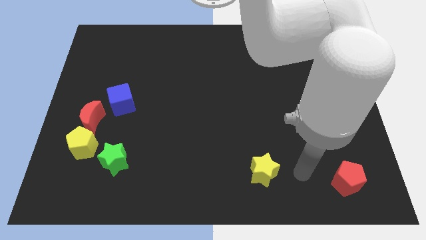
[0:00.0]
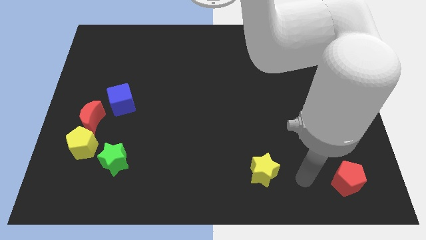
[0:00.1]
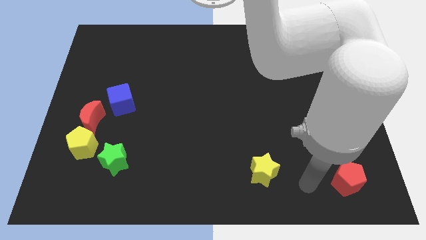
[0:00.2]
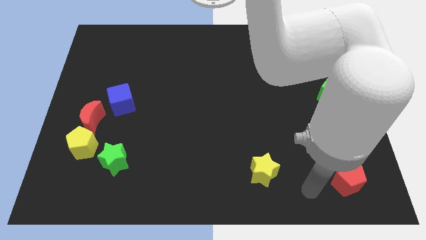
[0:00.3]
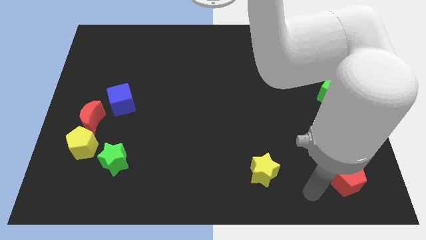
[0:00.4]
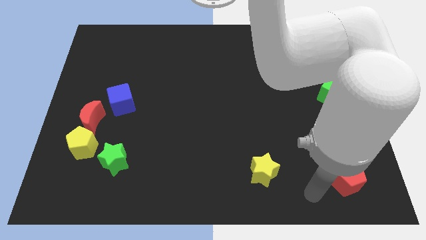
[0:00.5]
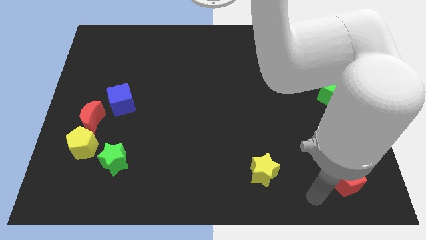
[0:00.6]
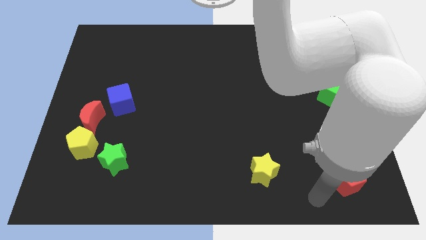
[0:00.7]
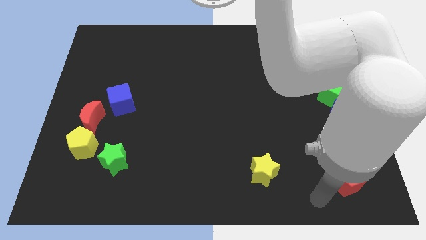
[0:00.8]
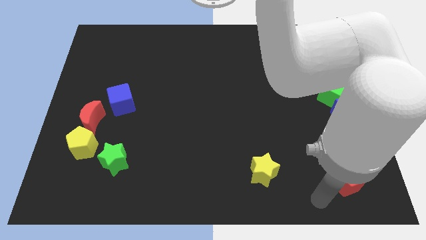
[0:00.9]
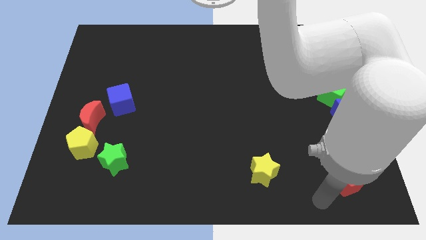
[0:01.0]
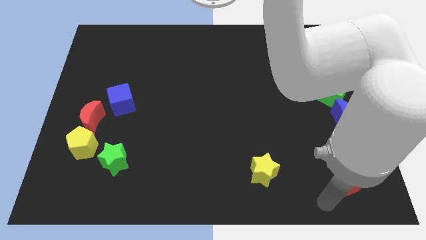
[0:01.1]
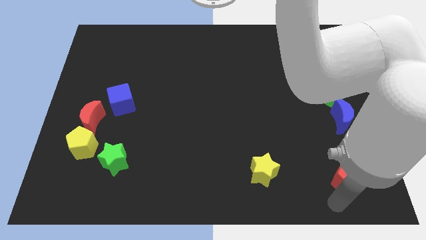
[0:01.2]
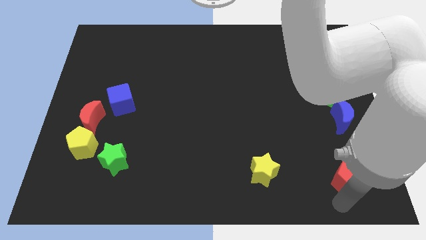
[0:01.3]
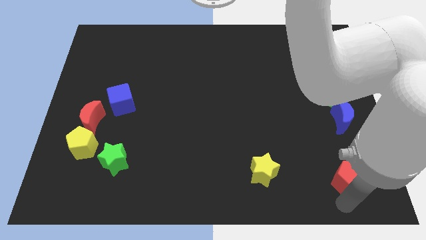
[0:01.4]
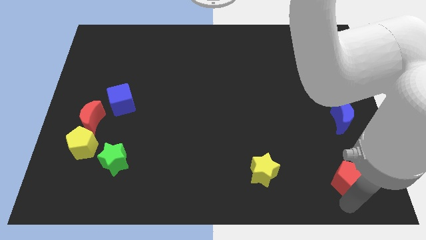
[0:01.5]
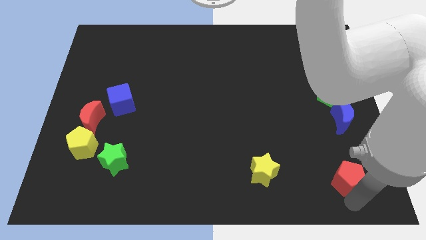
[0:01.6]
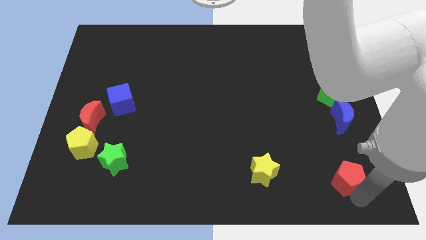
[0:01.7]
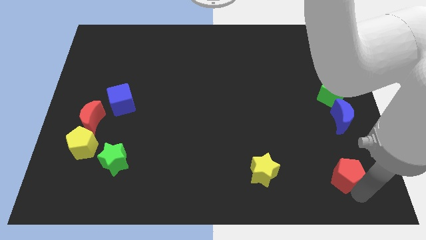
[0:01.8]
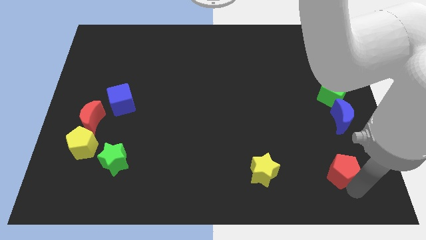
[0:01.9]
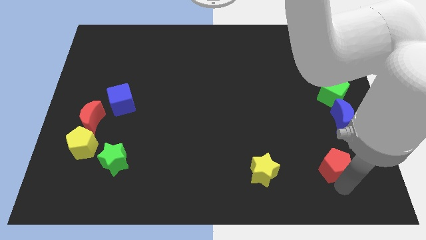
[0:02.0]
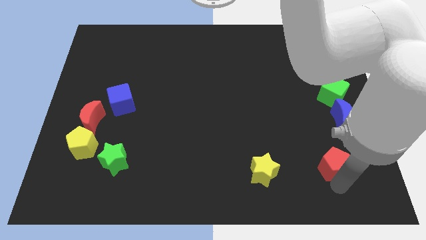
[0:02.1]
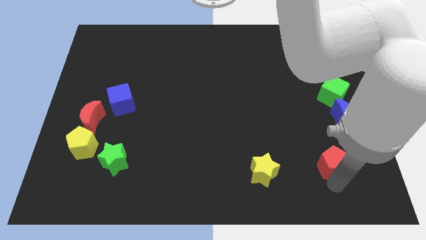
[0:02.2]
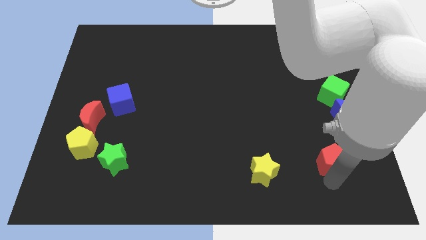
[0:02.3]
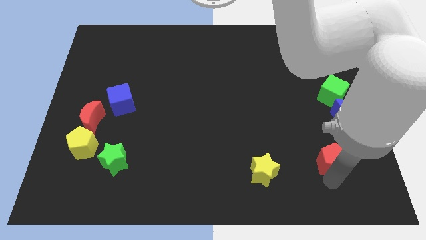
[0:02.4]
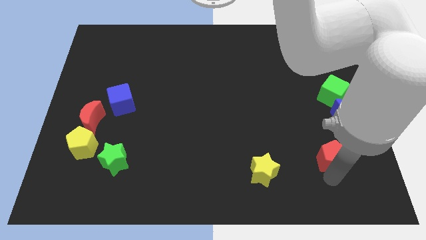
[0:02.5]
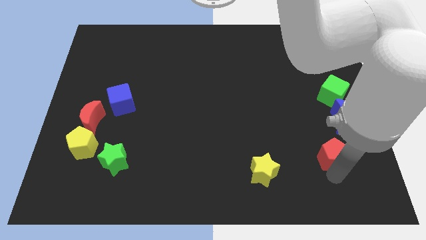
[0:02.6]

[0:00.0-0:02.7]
move the red pentagon to bottom of blue crescent

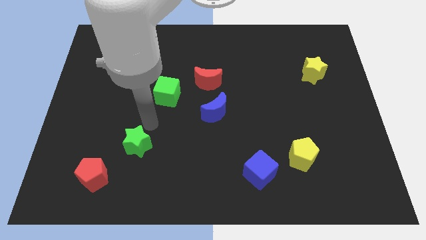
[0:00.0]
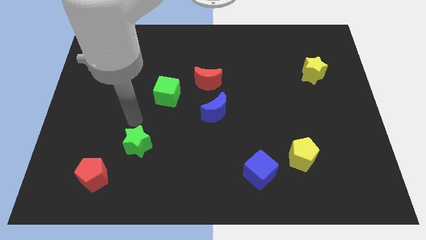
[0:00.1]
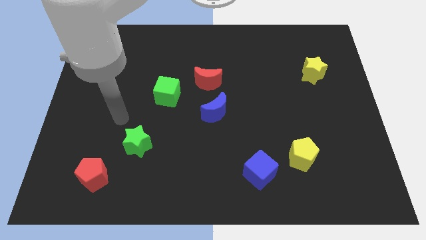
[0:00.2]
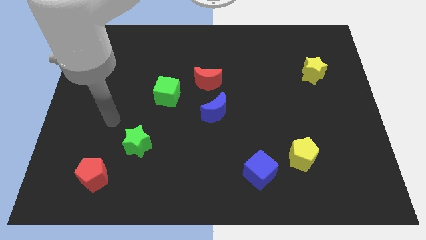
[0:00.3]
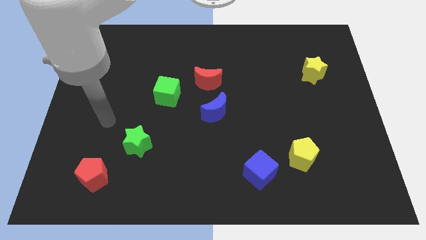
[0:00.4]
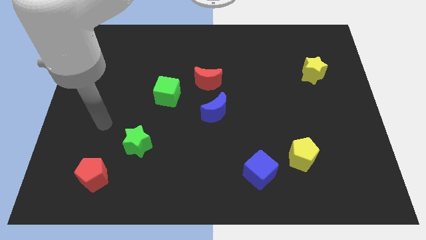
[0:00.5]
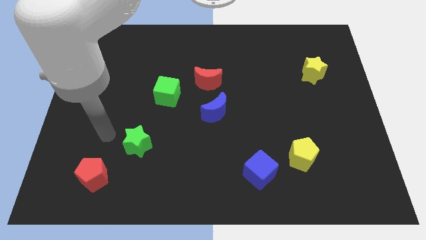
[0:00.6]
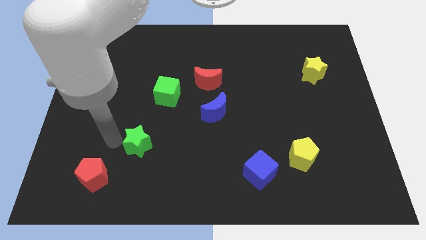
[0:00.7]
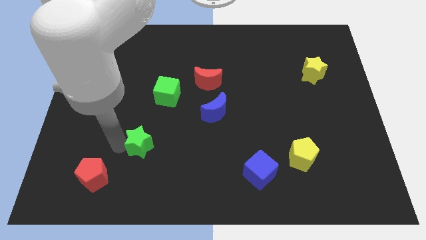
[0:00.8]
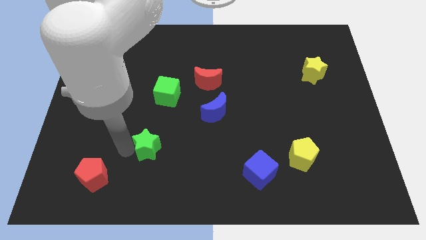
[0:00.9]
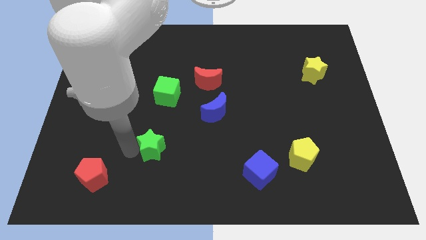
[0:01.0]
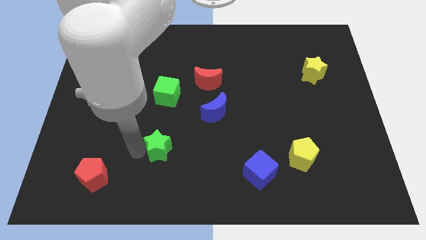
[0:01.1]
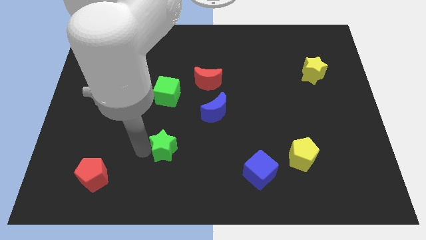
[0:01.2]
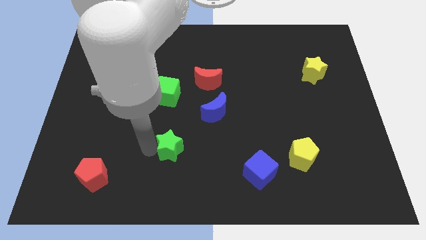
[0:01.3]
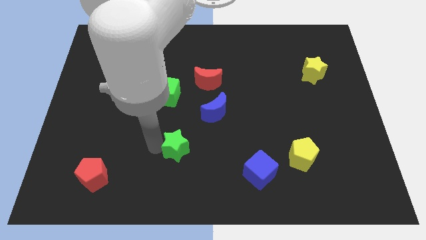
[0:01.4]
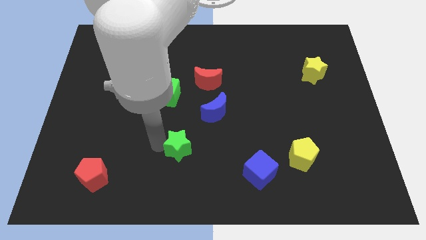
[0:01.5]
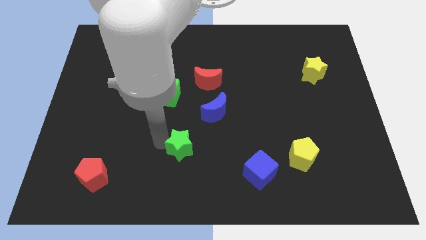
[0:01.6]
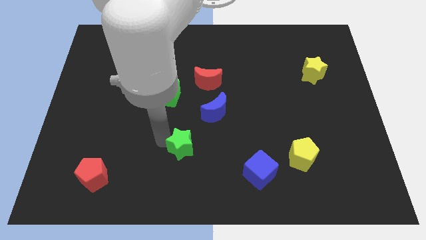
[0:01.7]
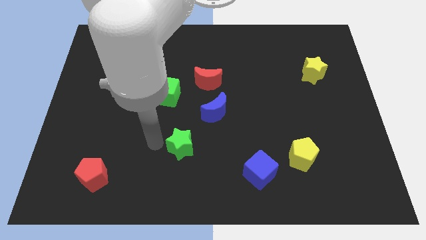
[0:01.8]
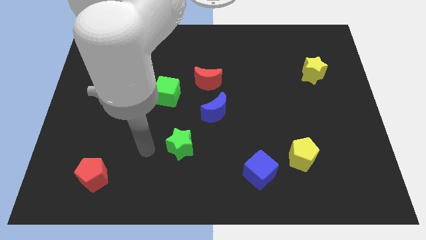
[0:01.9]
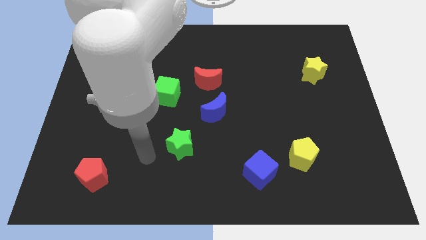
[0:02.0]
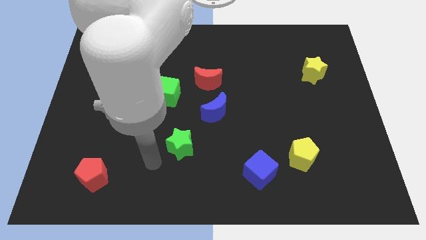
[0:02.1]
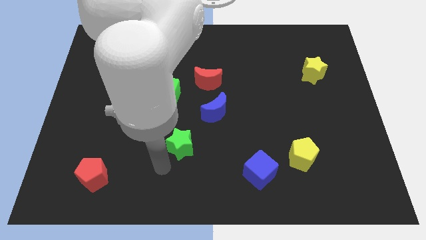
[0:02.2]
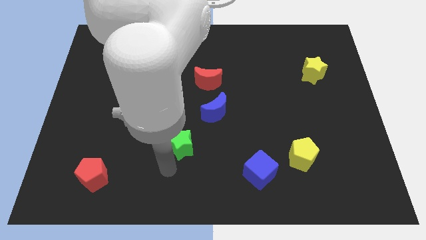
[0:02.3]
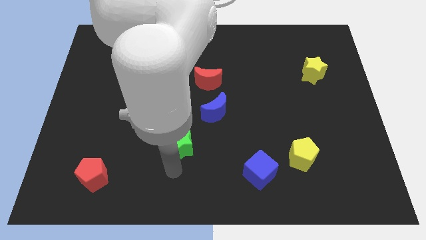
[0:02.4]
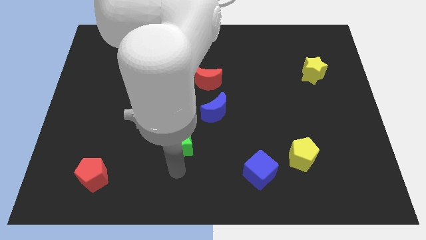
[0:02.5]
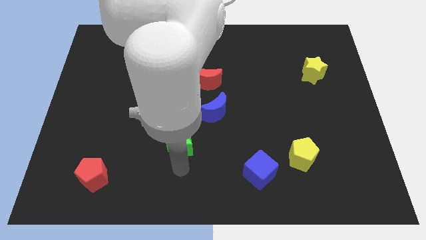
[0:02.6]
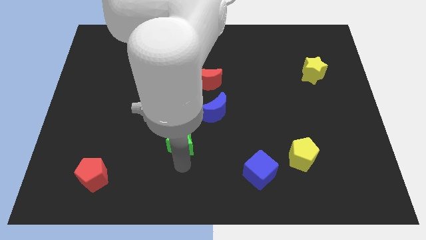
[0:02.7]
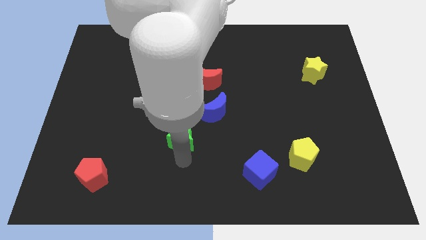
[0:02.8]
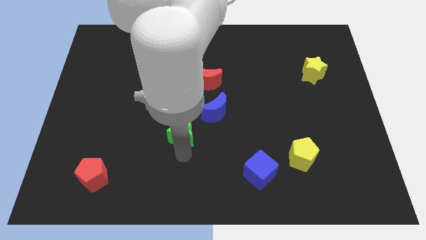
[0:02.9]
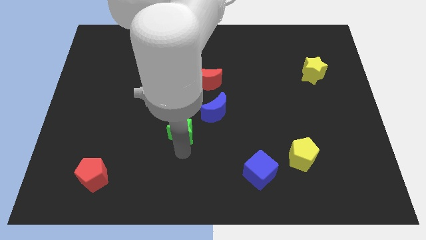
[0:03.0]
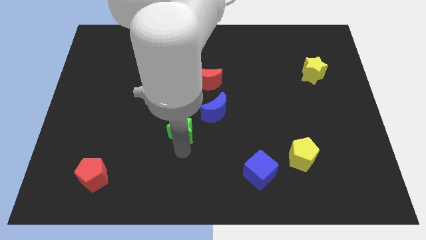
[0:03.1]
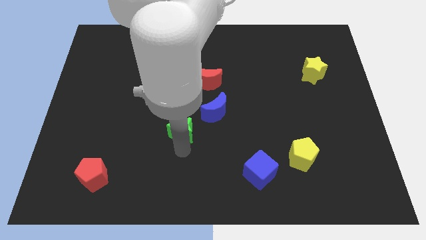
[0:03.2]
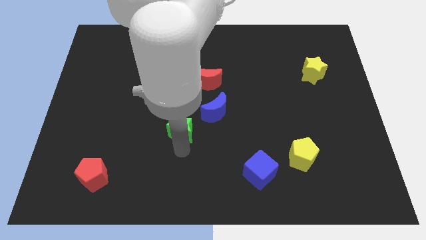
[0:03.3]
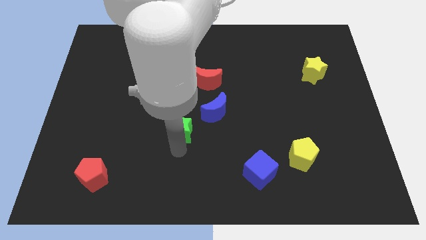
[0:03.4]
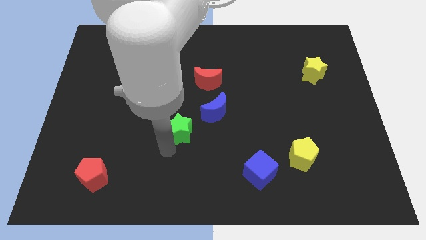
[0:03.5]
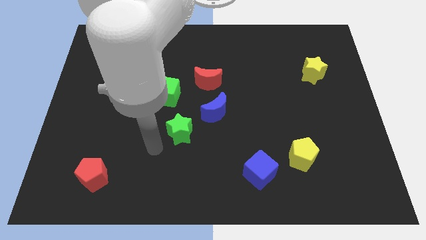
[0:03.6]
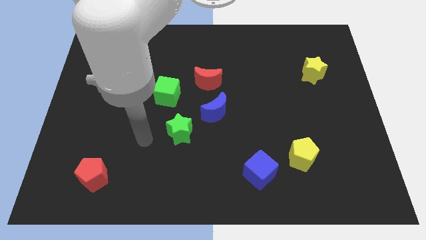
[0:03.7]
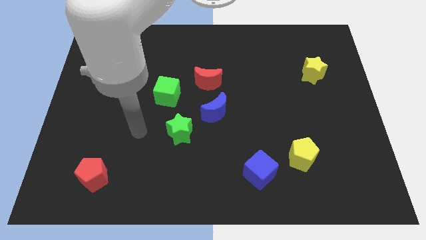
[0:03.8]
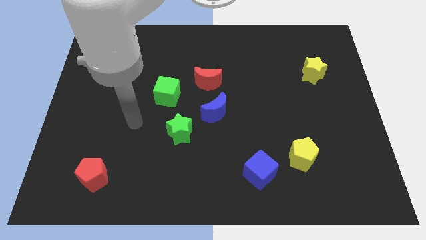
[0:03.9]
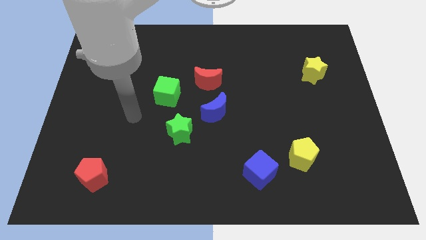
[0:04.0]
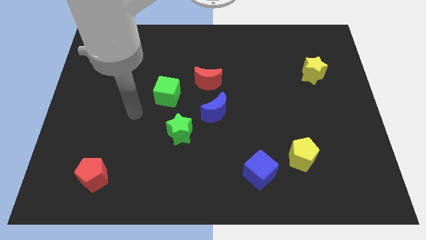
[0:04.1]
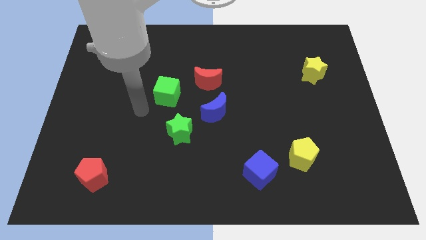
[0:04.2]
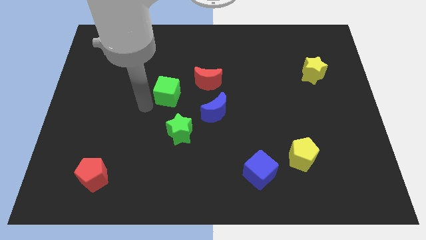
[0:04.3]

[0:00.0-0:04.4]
place the green star below the green cube

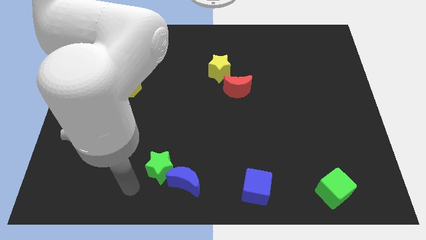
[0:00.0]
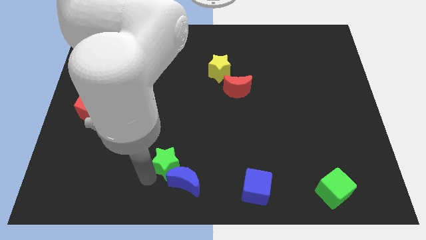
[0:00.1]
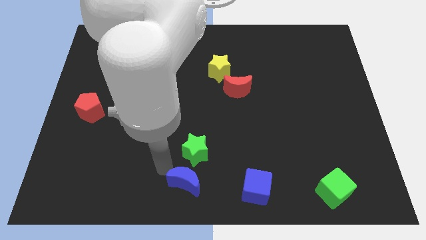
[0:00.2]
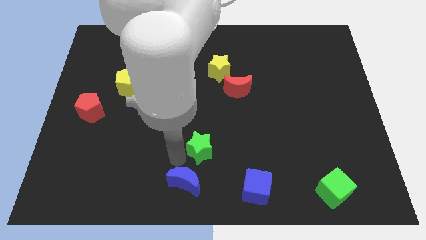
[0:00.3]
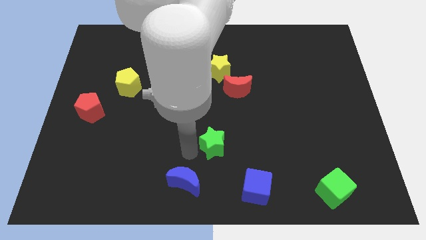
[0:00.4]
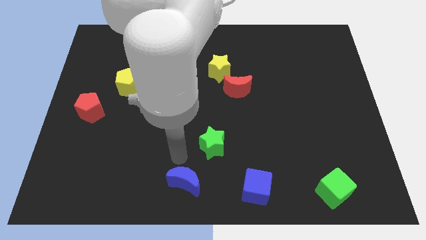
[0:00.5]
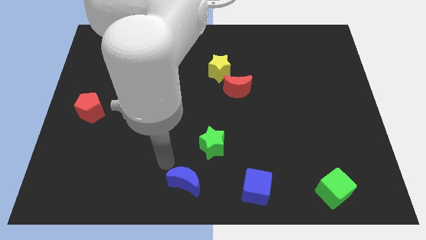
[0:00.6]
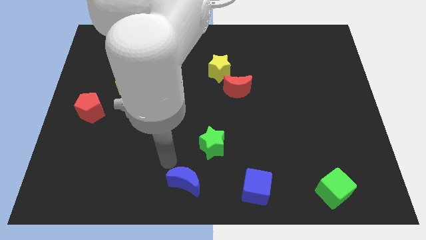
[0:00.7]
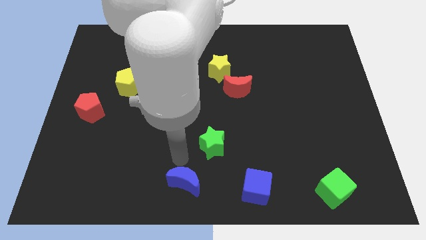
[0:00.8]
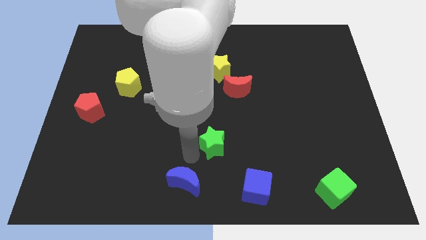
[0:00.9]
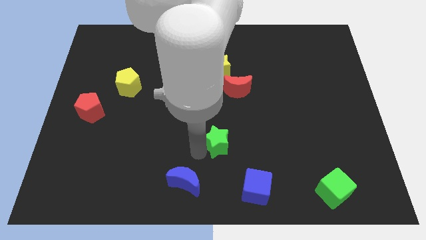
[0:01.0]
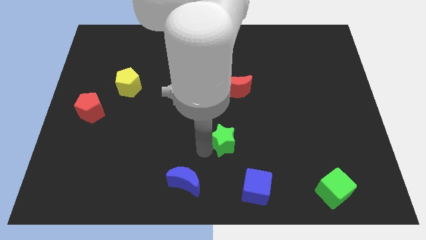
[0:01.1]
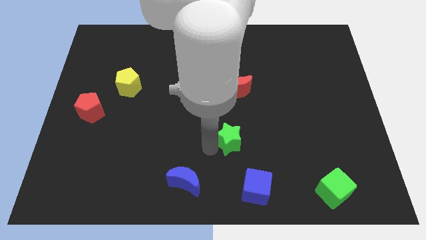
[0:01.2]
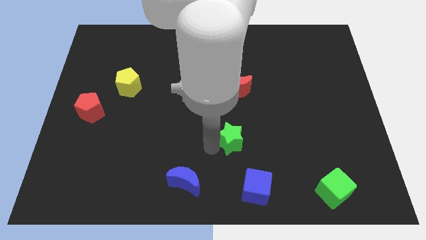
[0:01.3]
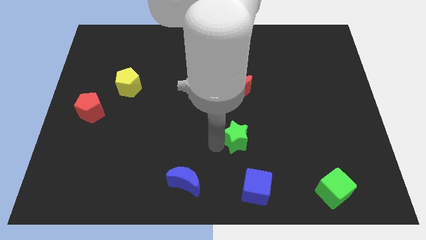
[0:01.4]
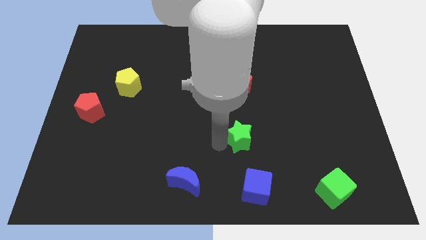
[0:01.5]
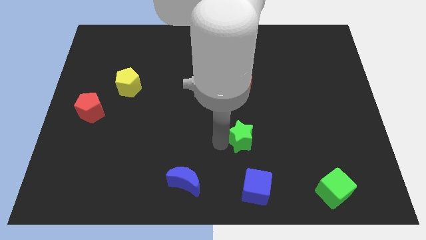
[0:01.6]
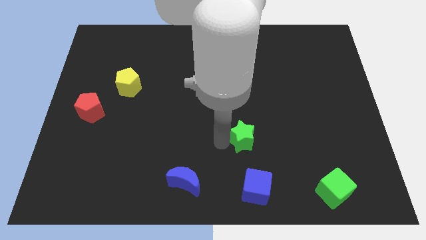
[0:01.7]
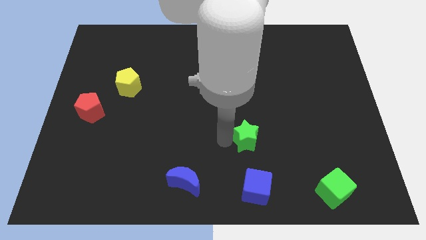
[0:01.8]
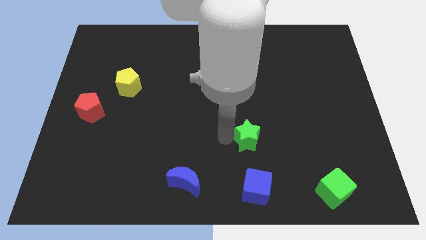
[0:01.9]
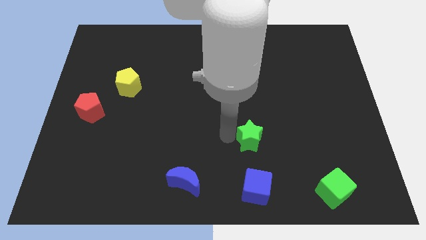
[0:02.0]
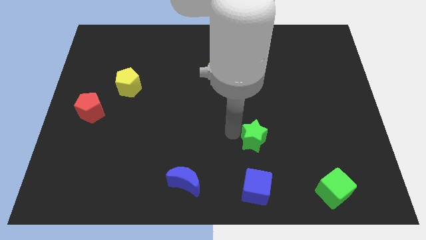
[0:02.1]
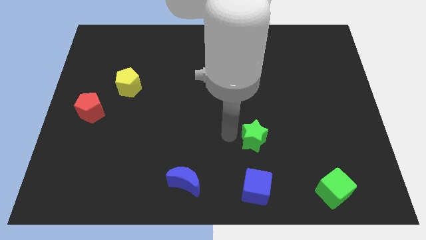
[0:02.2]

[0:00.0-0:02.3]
place the green star above the blue cube
